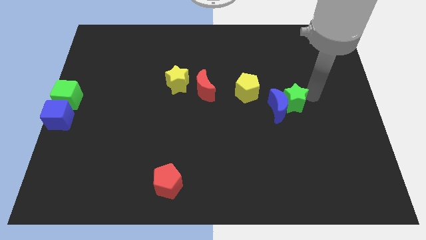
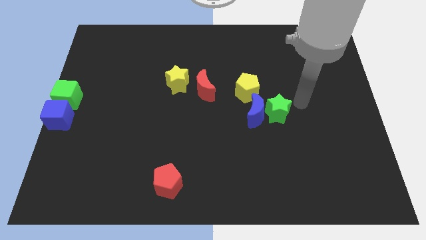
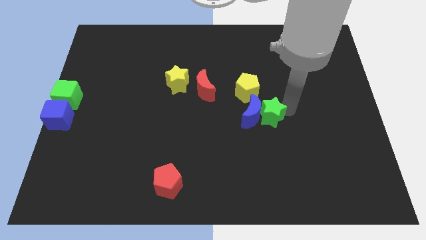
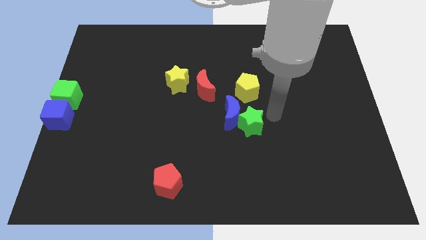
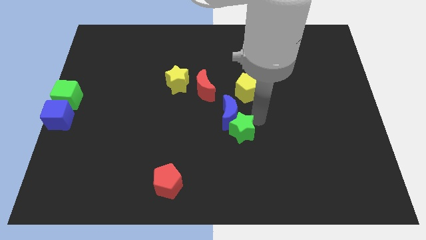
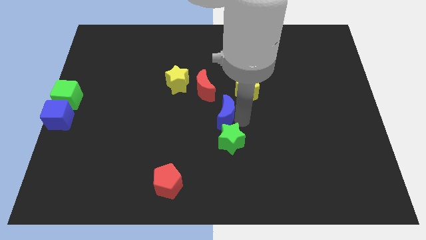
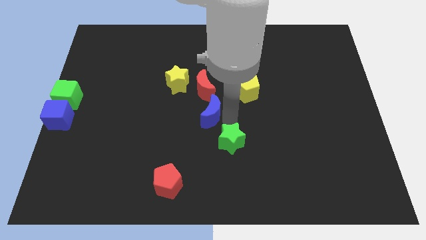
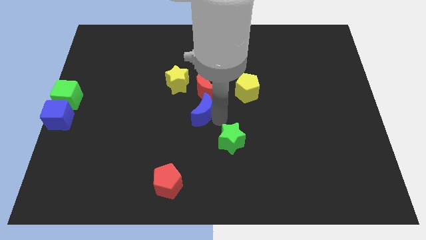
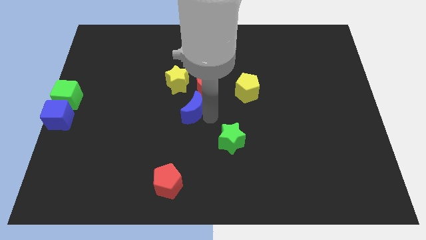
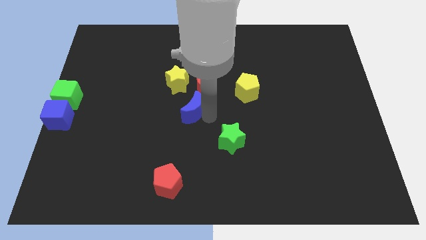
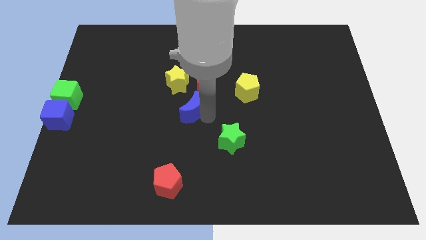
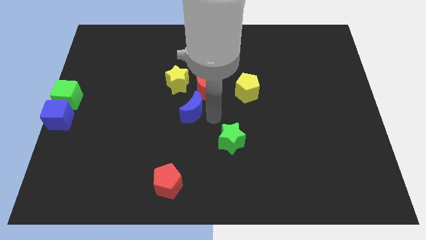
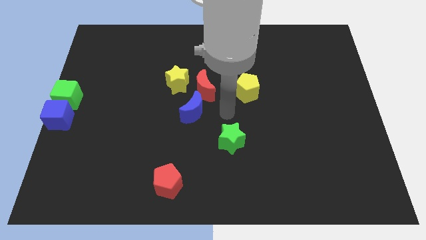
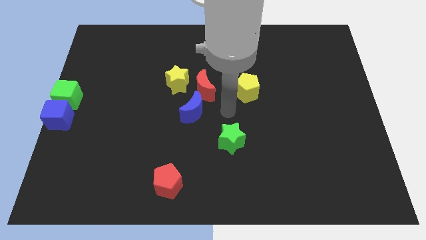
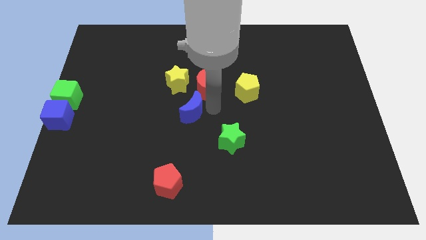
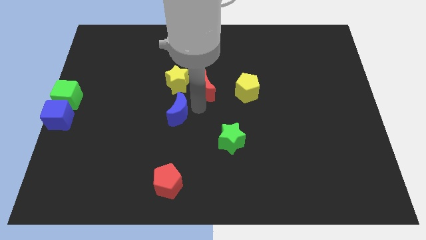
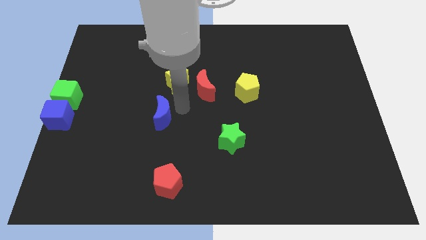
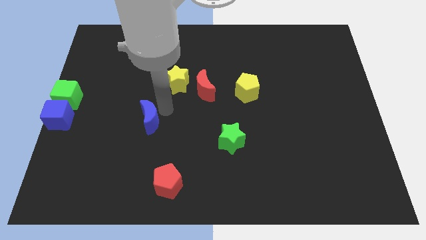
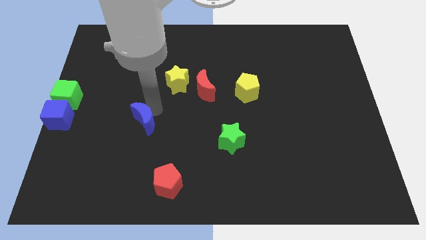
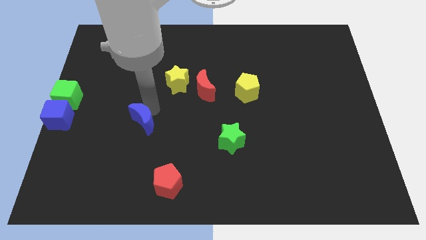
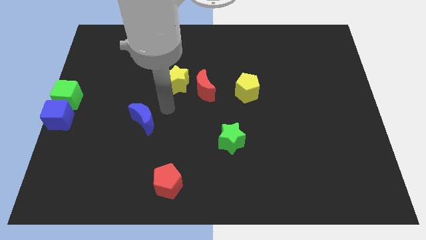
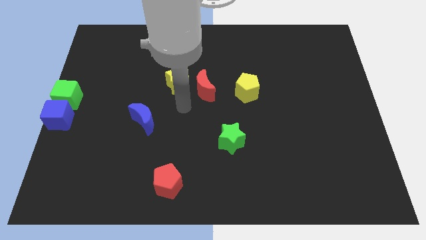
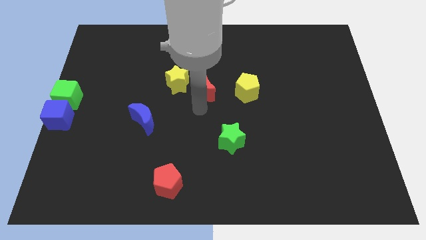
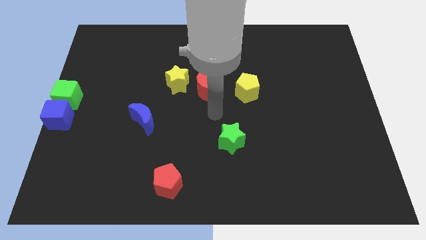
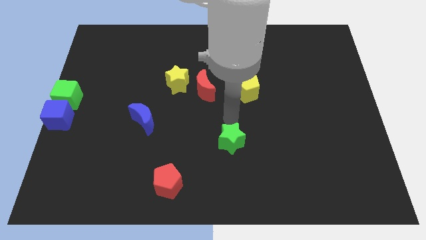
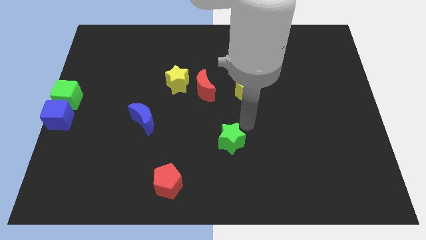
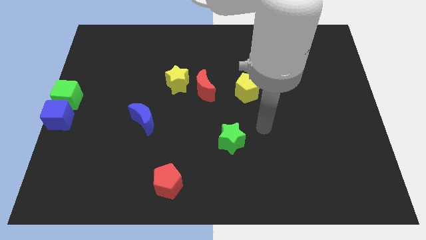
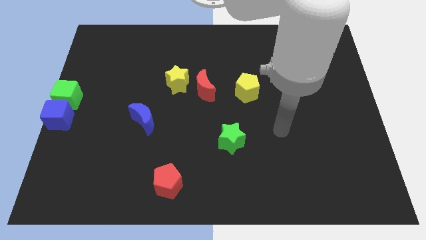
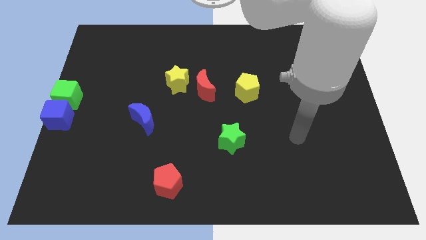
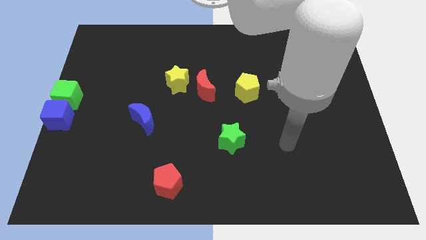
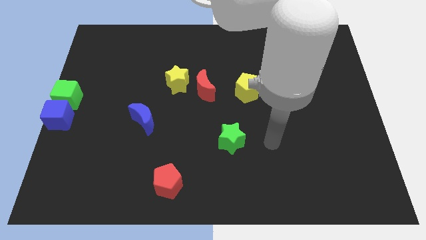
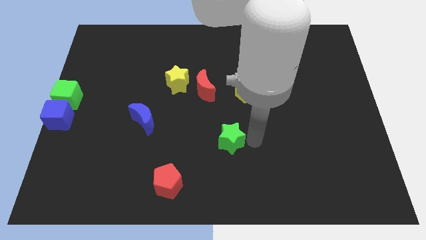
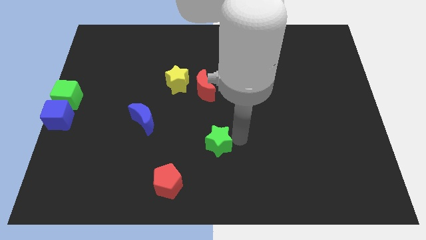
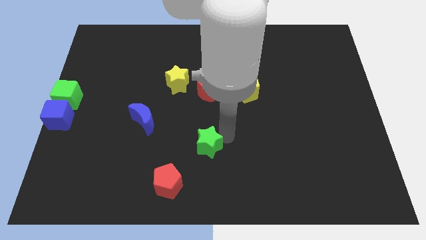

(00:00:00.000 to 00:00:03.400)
separate the green star and blue crescent

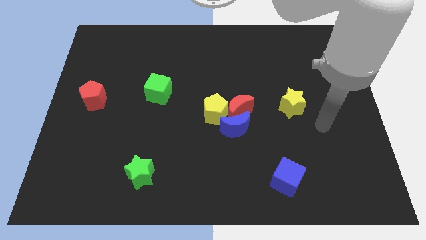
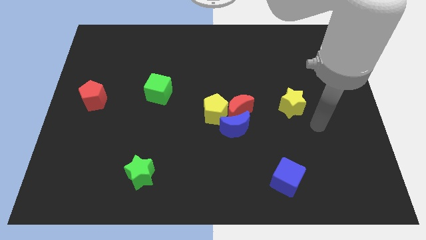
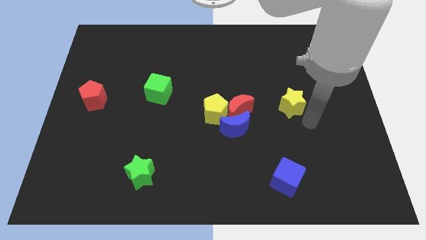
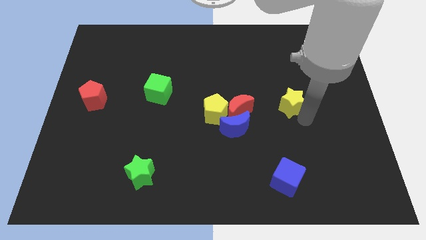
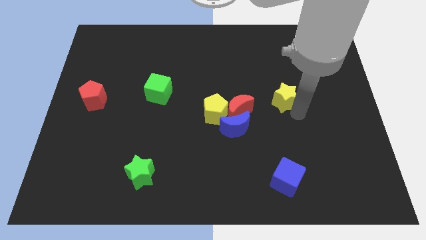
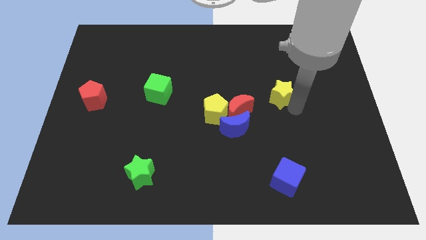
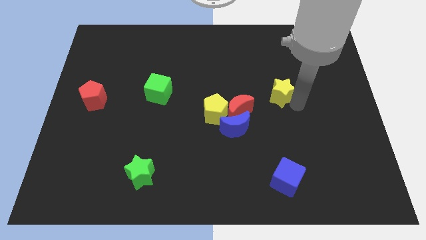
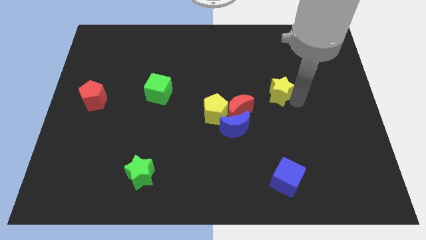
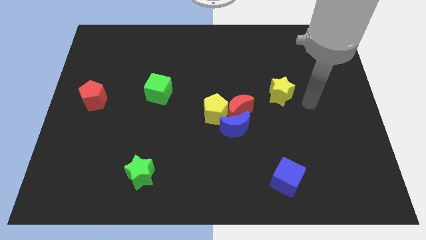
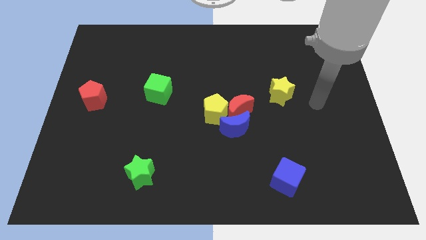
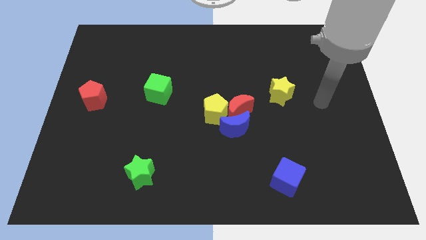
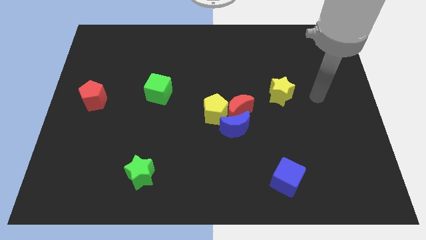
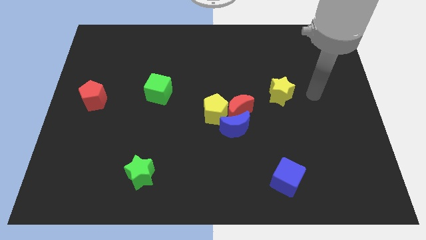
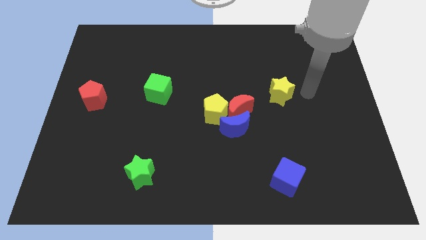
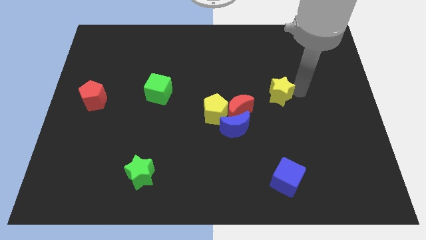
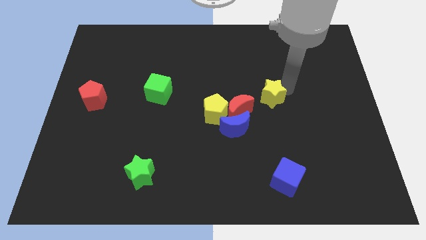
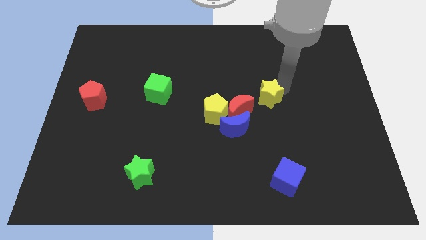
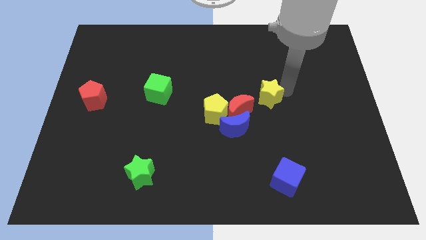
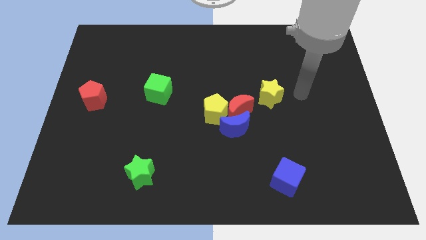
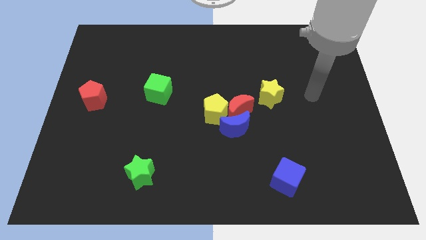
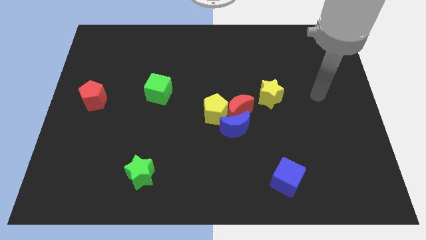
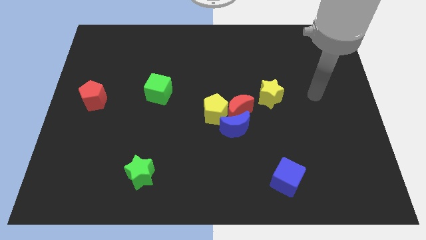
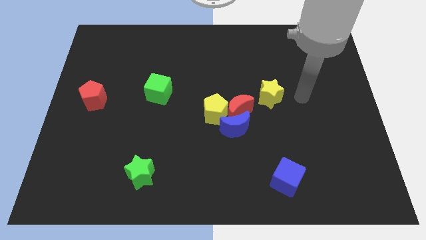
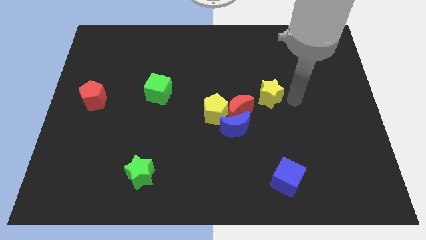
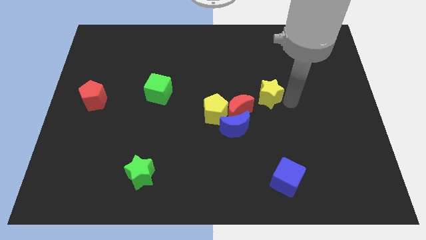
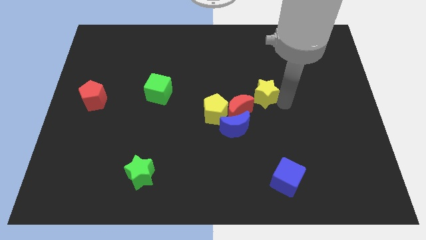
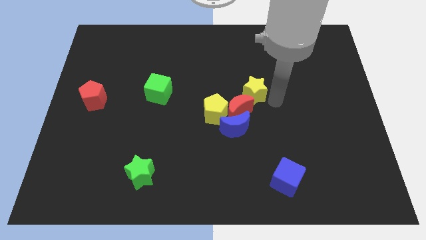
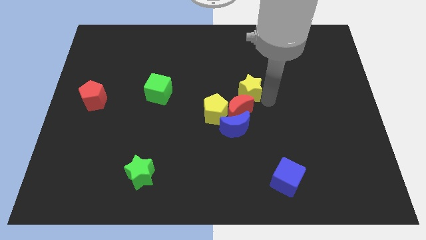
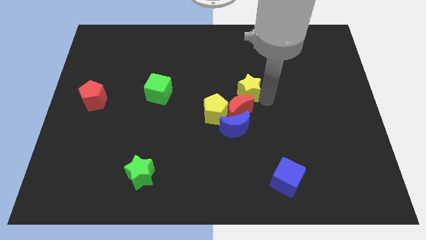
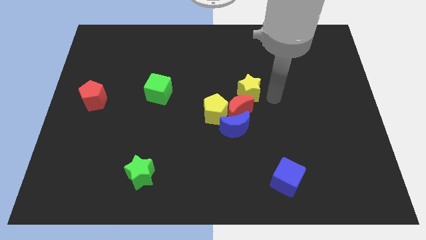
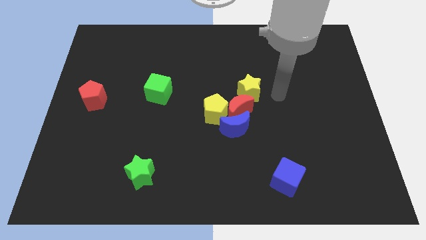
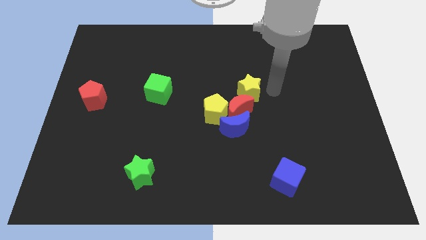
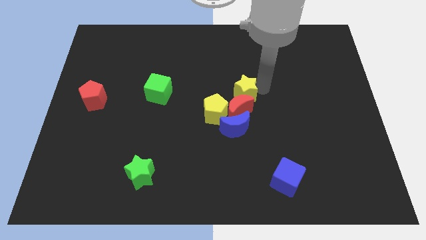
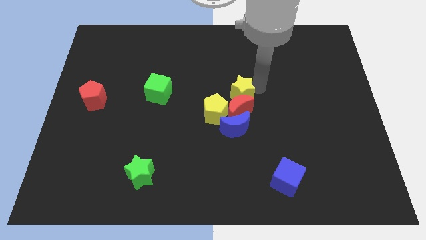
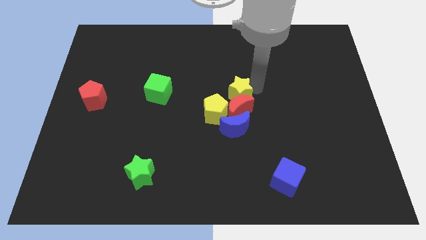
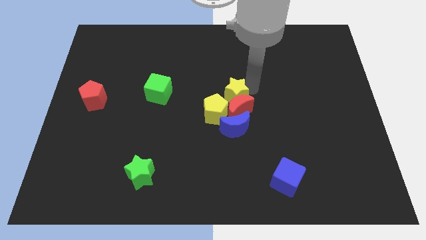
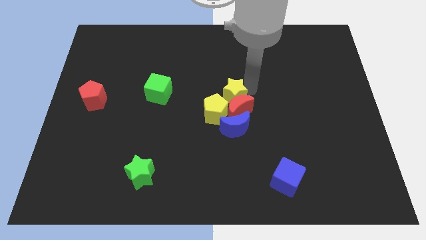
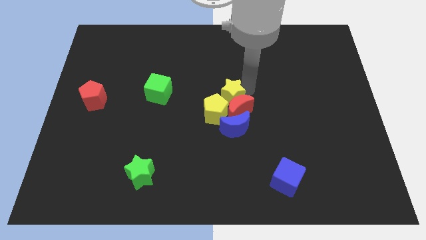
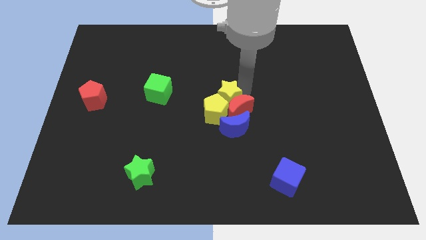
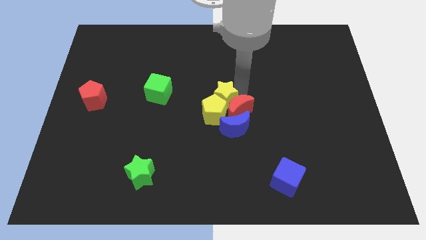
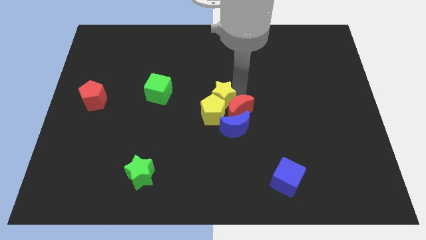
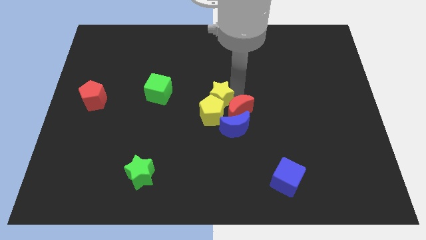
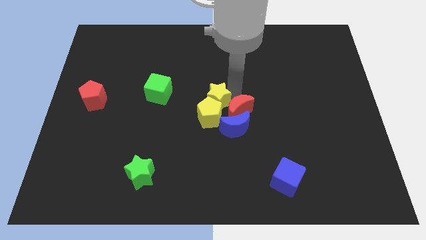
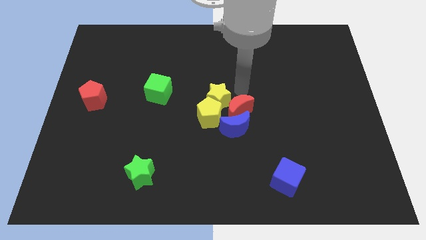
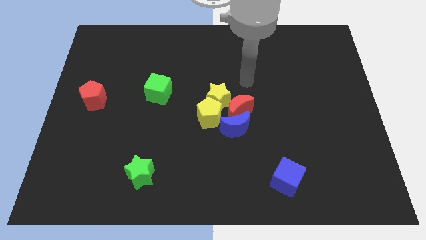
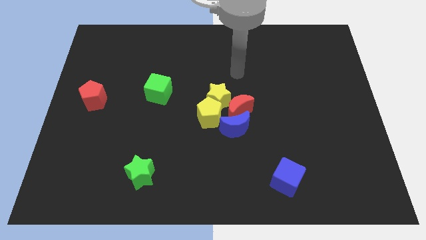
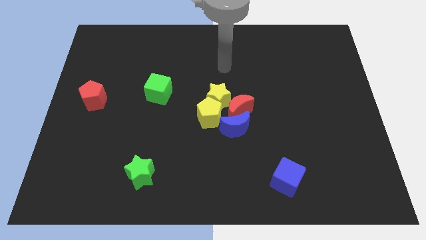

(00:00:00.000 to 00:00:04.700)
move the yellow star into yellow pentagon

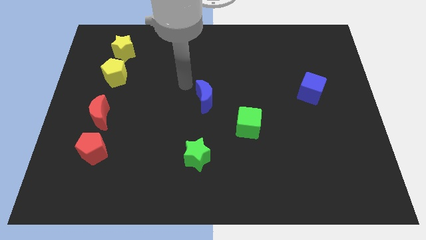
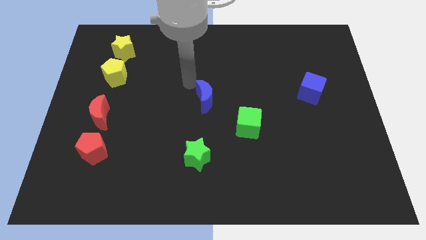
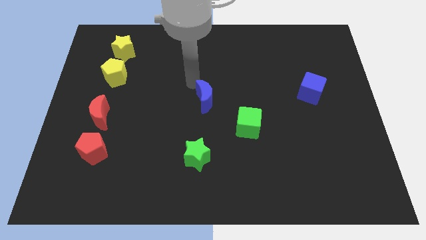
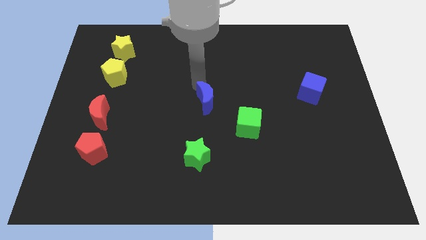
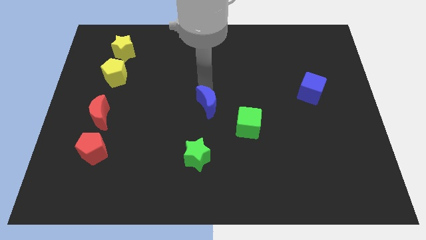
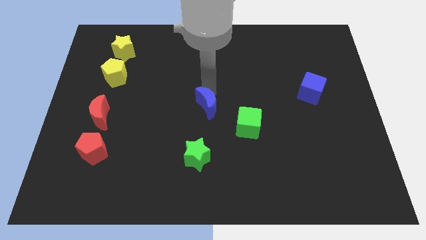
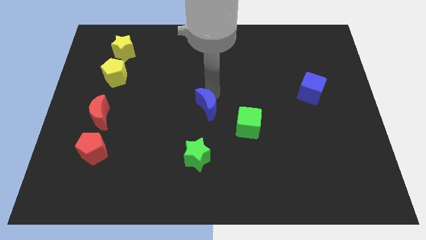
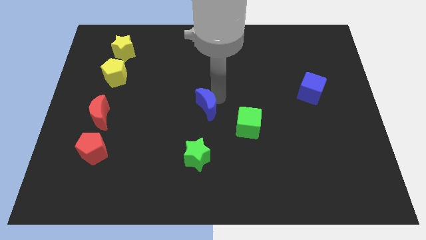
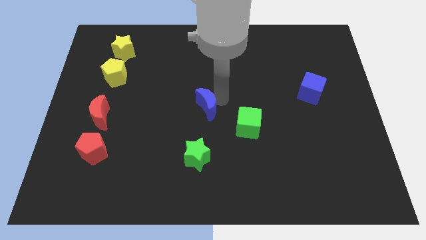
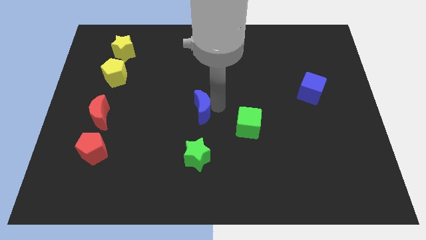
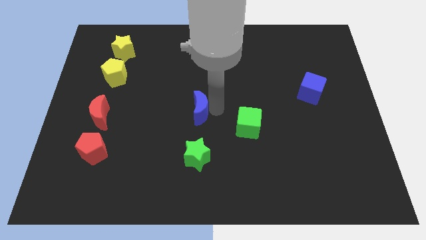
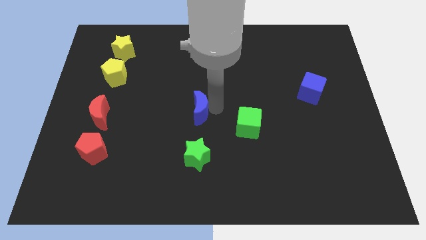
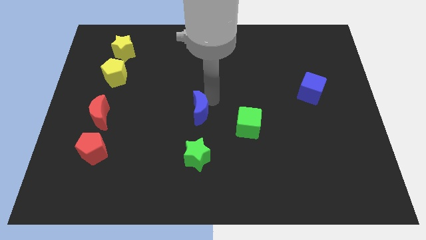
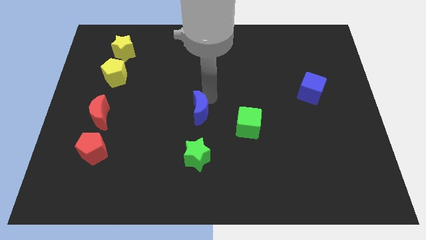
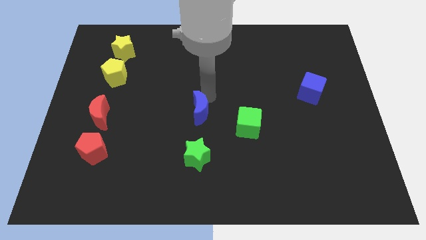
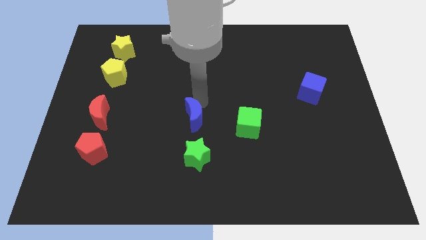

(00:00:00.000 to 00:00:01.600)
push the blue crescent parallel to the red crescent
